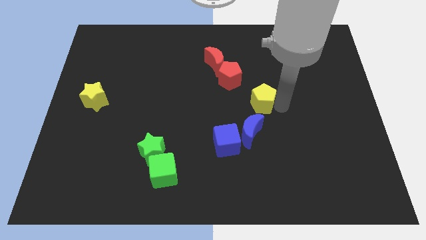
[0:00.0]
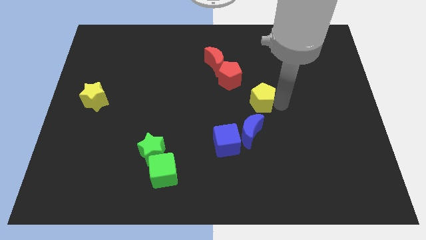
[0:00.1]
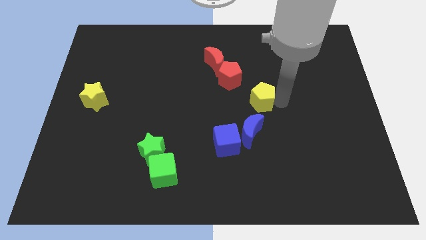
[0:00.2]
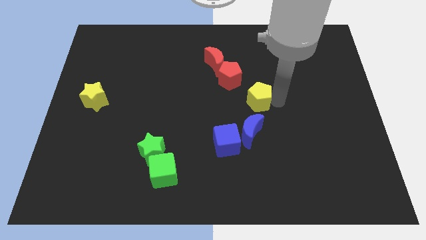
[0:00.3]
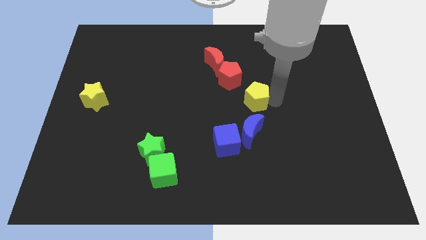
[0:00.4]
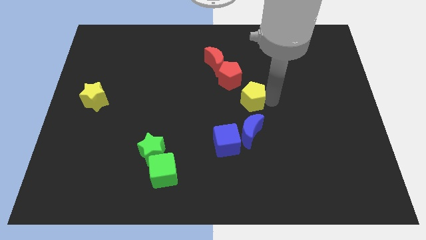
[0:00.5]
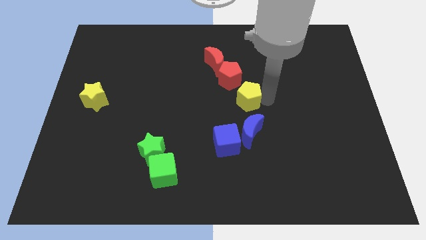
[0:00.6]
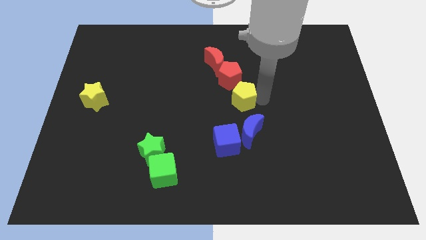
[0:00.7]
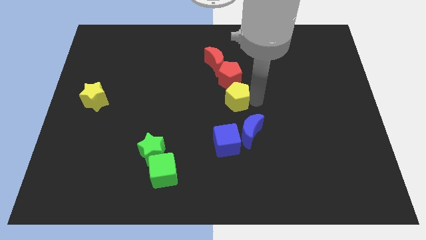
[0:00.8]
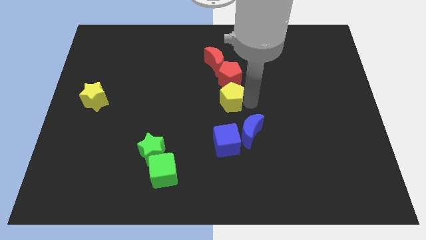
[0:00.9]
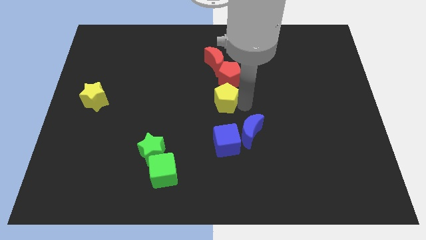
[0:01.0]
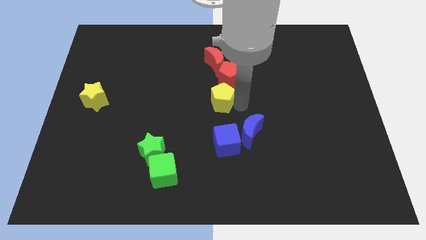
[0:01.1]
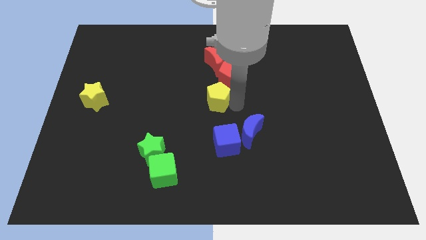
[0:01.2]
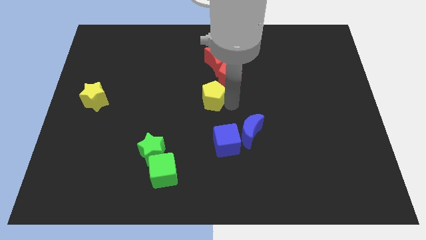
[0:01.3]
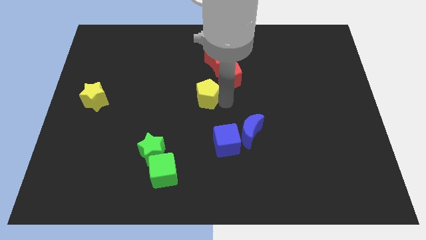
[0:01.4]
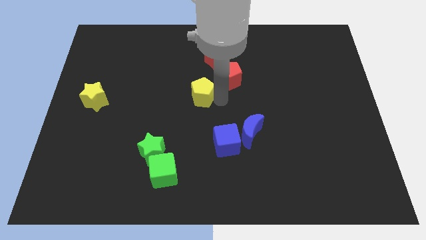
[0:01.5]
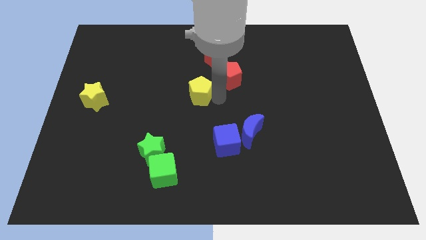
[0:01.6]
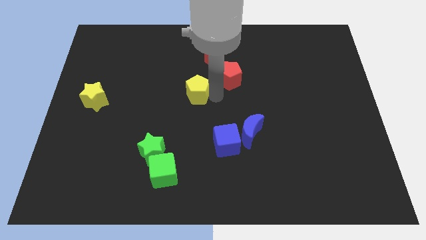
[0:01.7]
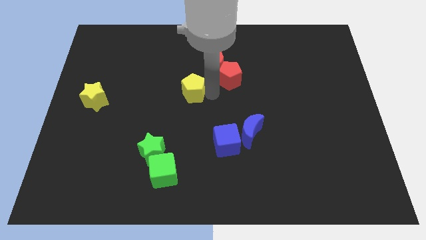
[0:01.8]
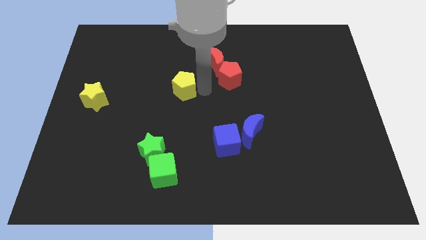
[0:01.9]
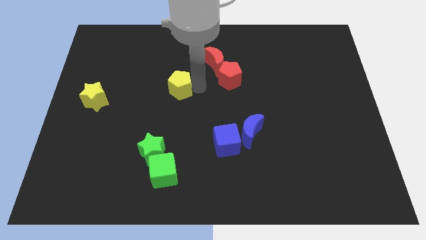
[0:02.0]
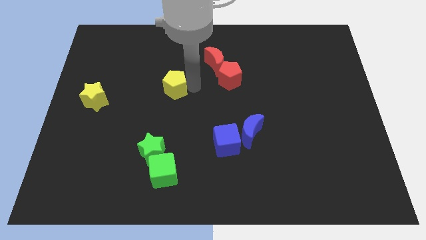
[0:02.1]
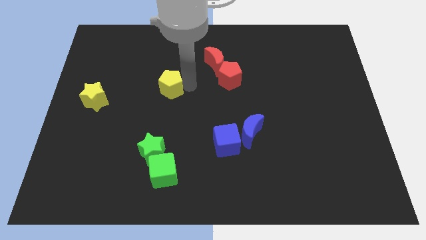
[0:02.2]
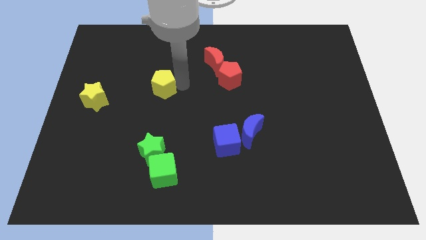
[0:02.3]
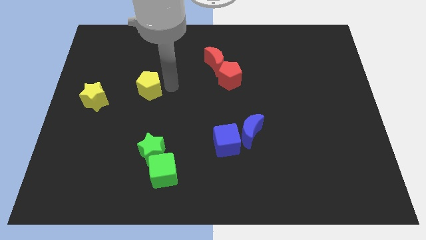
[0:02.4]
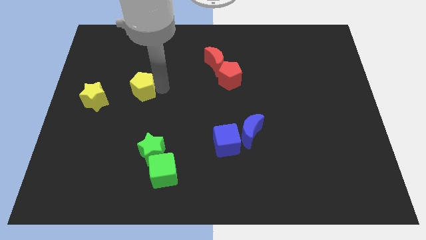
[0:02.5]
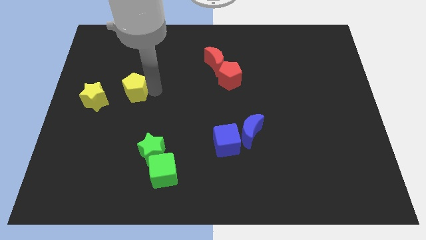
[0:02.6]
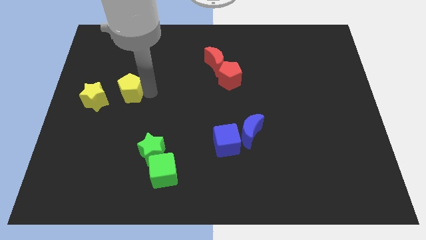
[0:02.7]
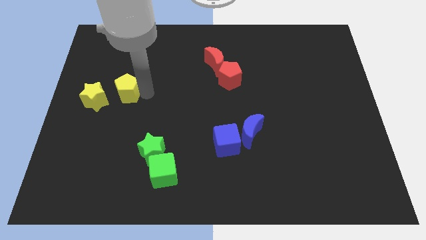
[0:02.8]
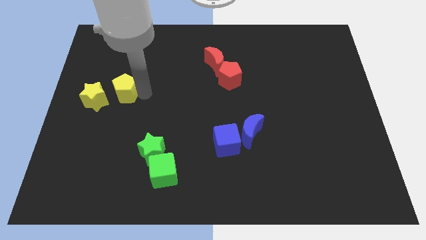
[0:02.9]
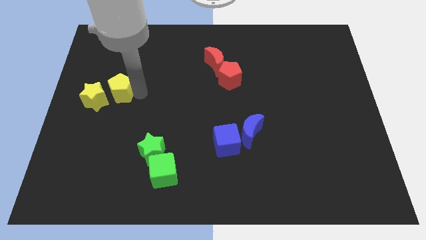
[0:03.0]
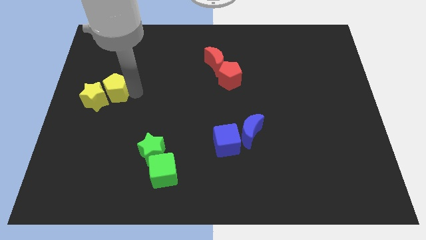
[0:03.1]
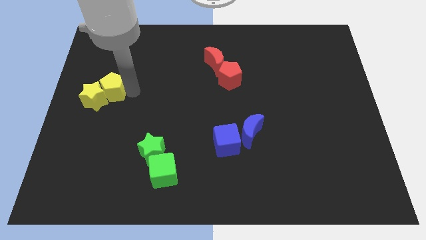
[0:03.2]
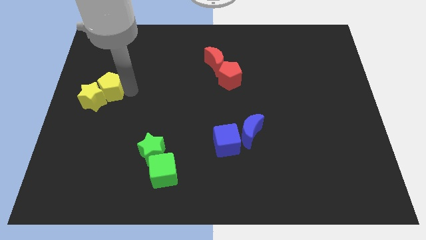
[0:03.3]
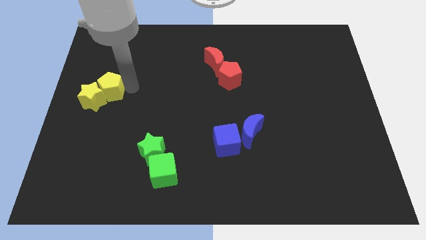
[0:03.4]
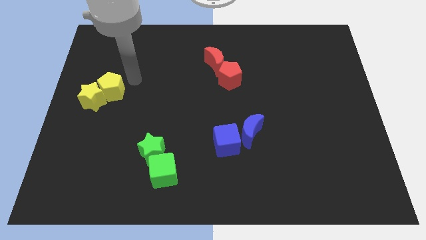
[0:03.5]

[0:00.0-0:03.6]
push the yellow pentagon diagonally to the top right of the yellow star

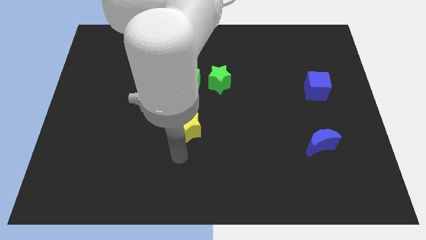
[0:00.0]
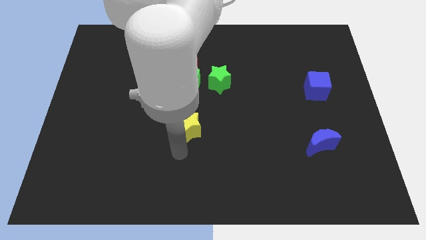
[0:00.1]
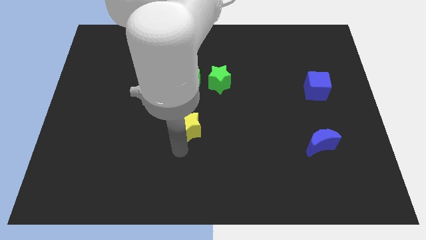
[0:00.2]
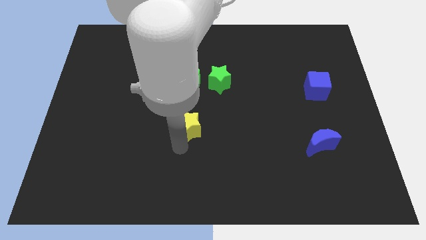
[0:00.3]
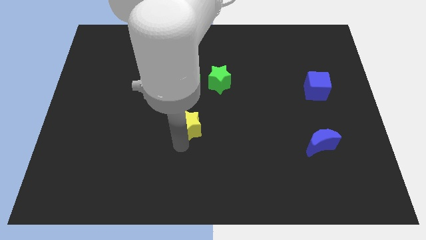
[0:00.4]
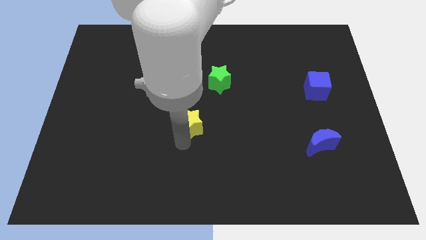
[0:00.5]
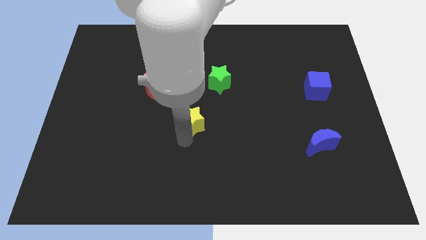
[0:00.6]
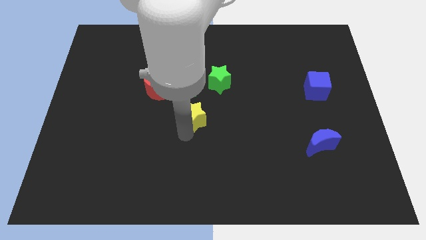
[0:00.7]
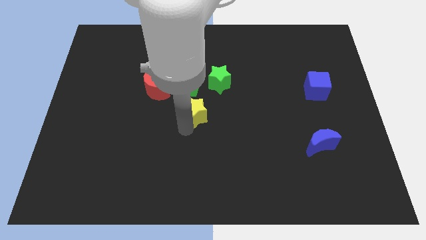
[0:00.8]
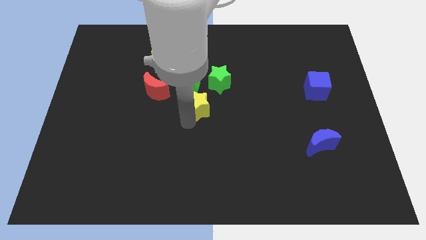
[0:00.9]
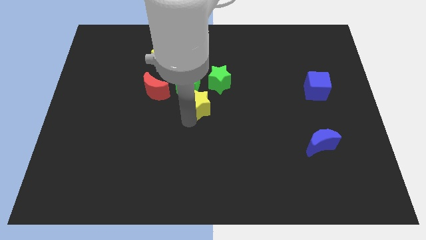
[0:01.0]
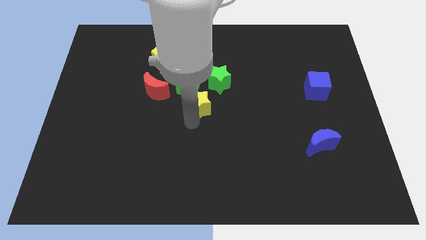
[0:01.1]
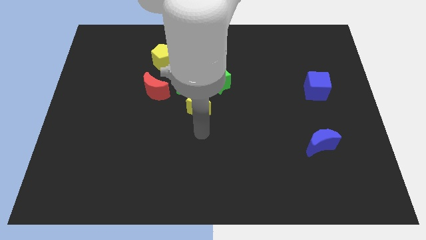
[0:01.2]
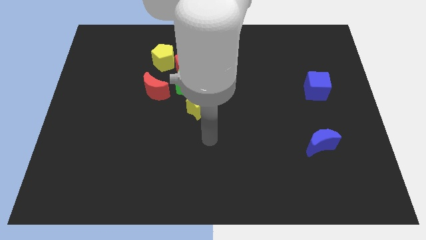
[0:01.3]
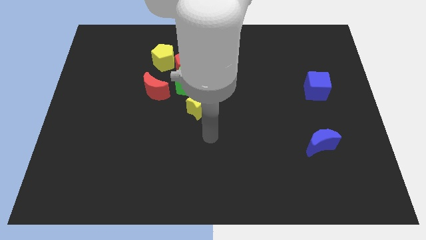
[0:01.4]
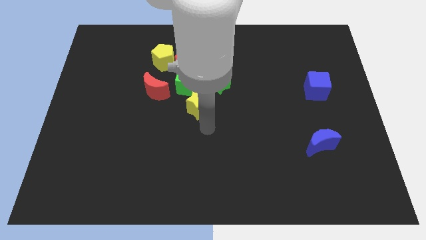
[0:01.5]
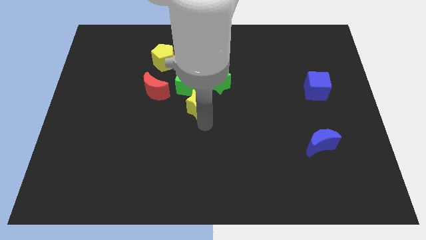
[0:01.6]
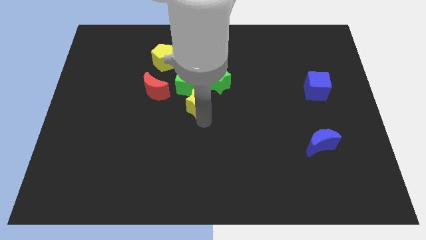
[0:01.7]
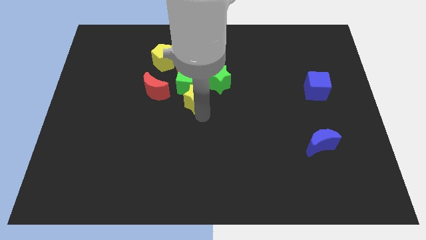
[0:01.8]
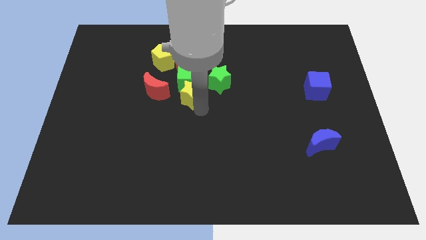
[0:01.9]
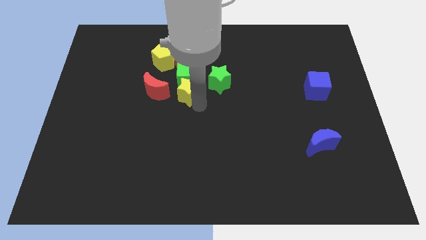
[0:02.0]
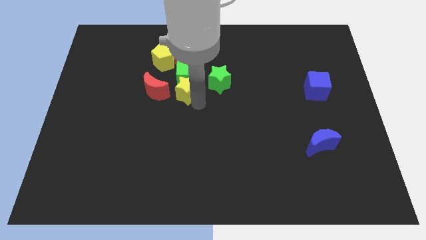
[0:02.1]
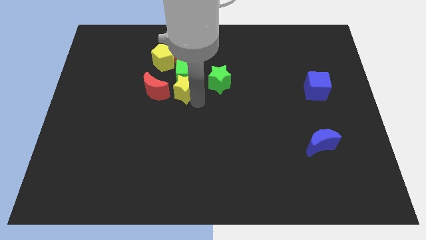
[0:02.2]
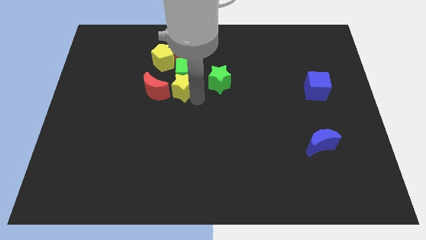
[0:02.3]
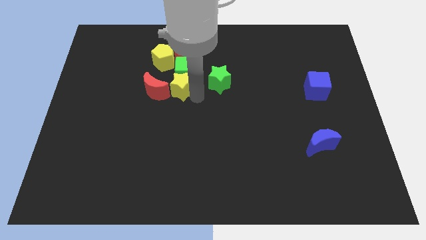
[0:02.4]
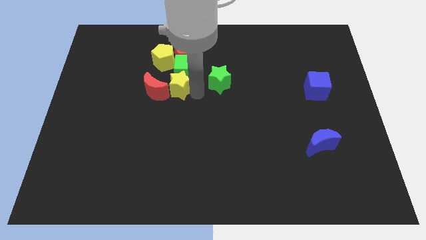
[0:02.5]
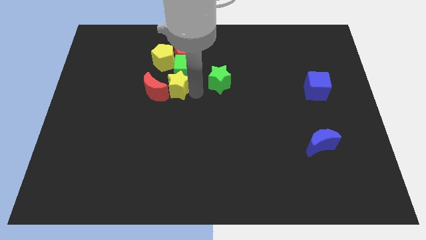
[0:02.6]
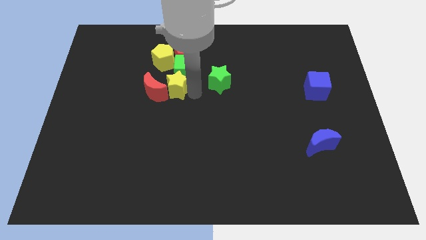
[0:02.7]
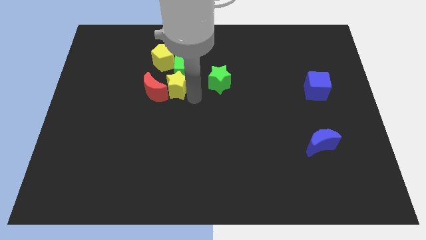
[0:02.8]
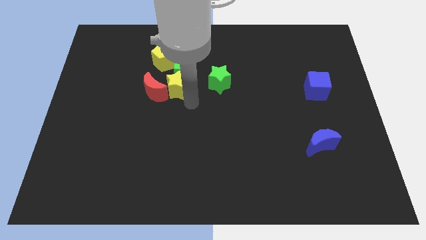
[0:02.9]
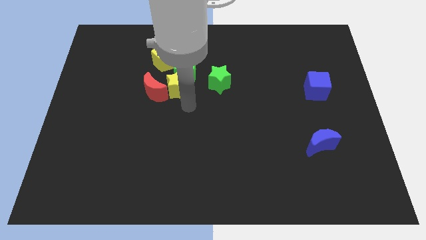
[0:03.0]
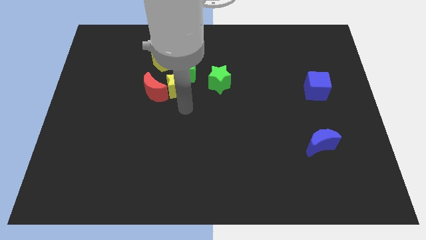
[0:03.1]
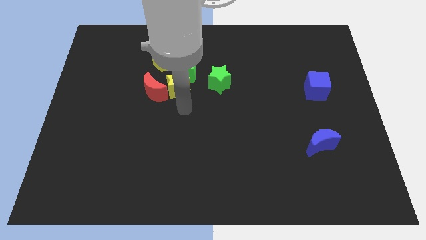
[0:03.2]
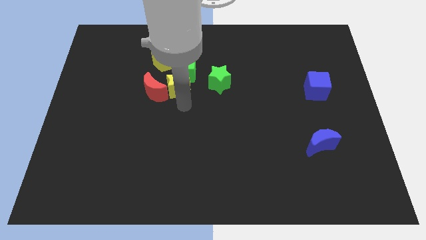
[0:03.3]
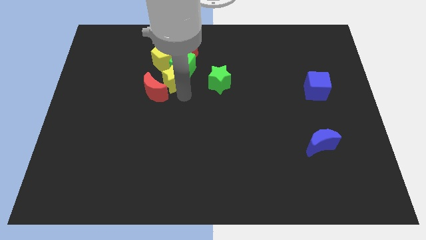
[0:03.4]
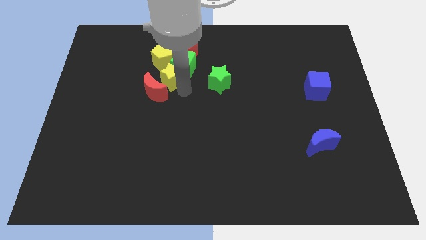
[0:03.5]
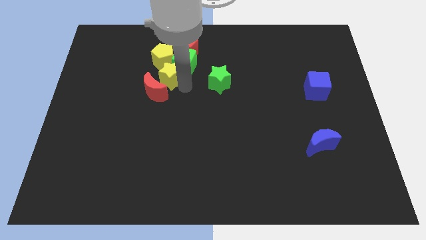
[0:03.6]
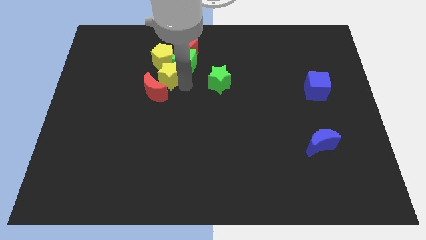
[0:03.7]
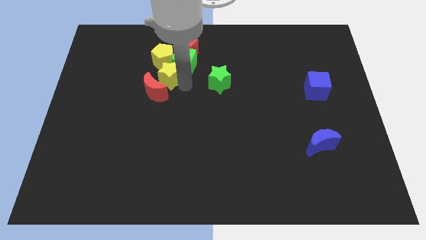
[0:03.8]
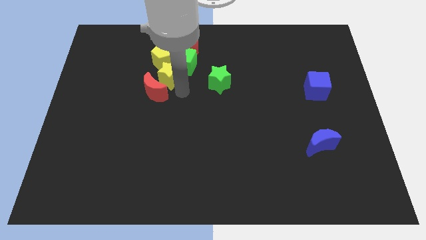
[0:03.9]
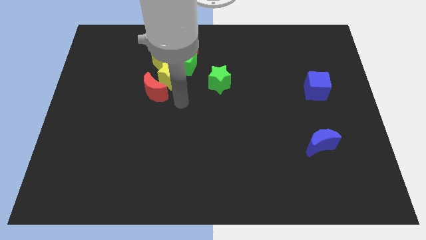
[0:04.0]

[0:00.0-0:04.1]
push the yellow star into the green cube

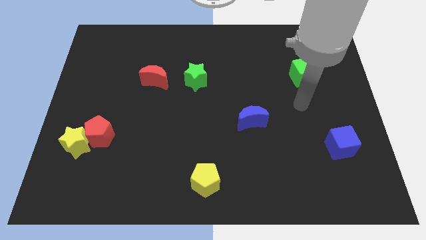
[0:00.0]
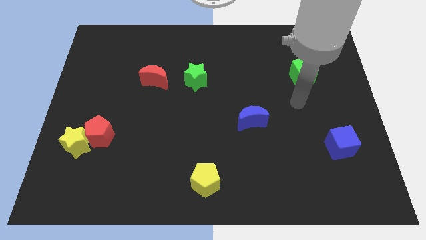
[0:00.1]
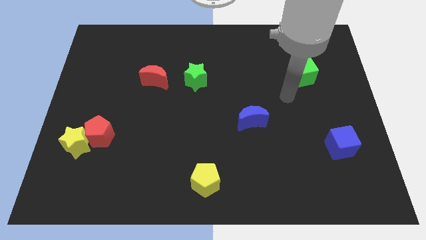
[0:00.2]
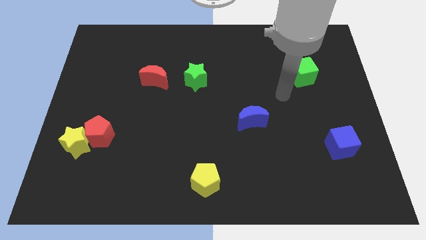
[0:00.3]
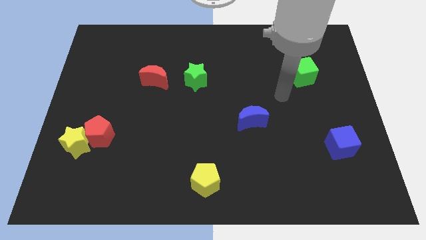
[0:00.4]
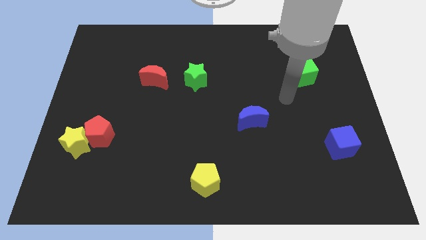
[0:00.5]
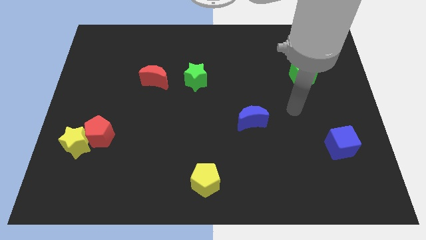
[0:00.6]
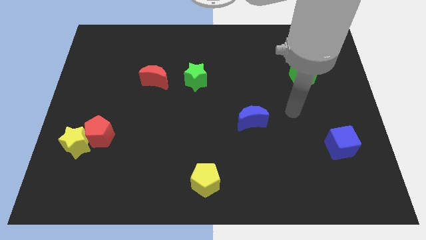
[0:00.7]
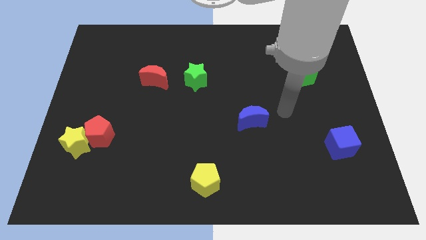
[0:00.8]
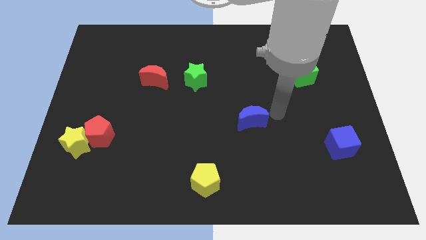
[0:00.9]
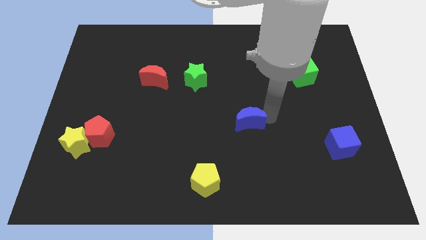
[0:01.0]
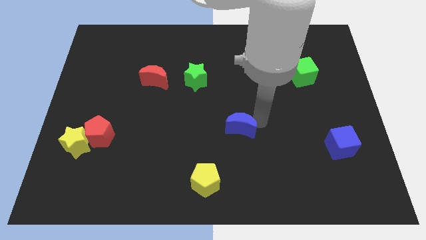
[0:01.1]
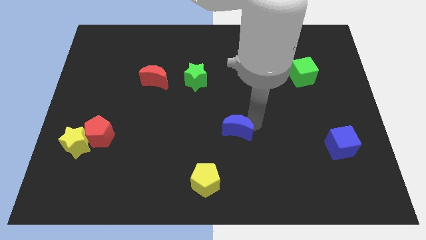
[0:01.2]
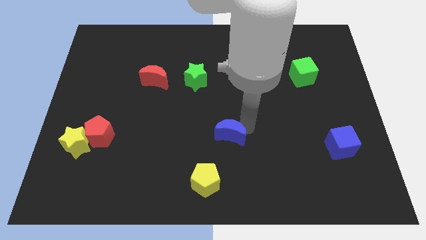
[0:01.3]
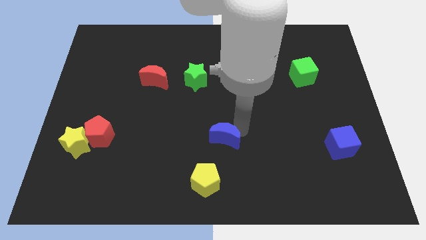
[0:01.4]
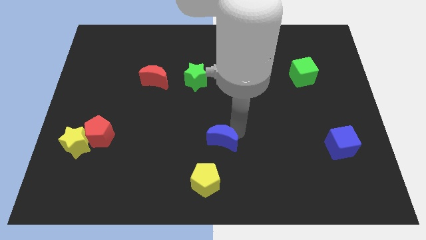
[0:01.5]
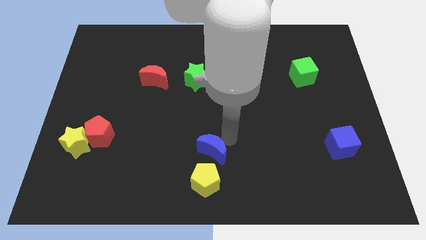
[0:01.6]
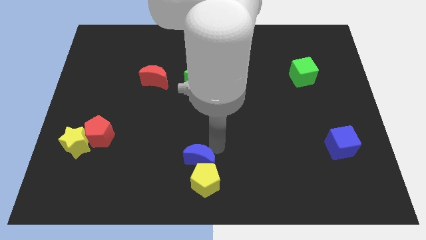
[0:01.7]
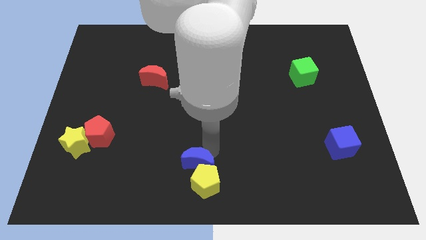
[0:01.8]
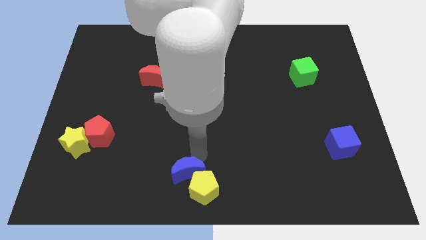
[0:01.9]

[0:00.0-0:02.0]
move the blue crescent above the yellow pentagon
